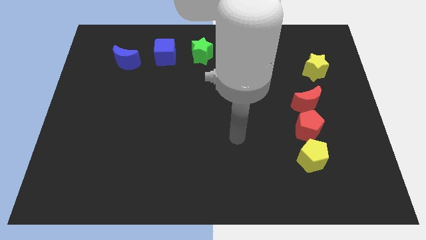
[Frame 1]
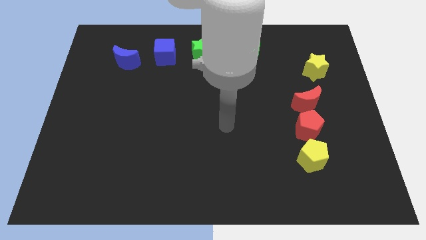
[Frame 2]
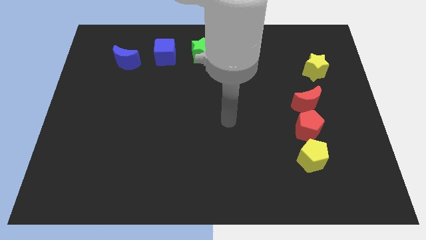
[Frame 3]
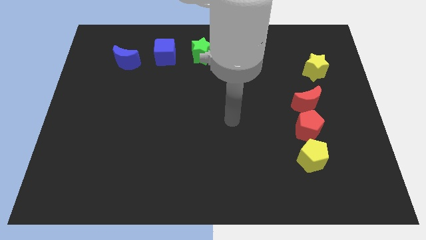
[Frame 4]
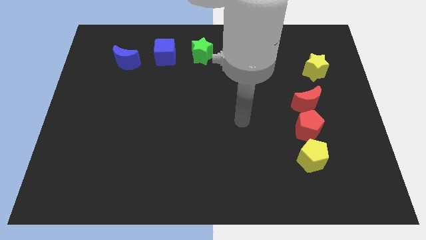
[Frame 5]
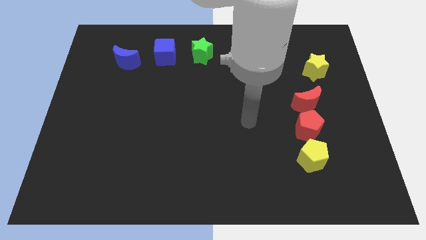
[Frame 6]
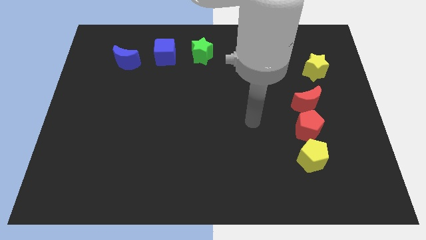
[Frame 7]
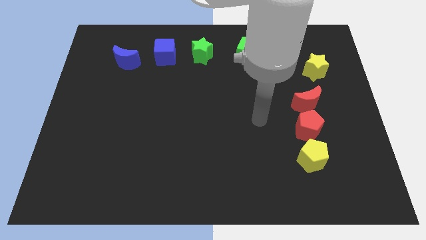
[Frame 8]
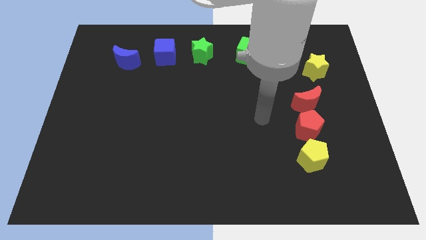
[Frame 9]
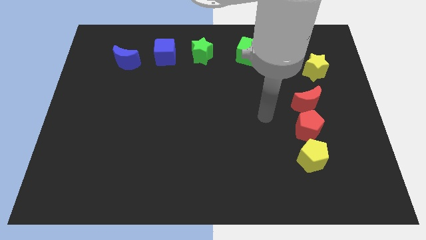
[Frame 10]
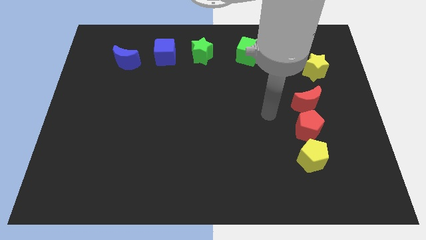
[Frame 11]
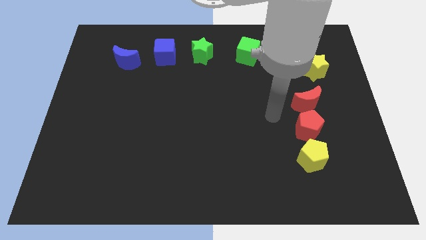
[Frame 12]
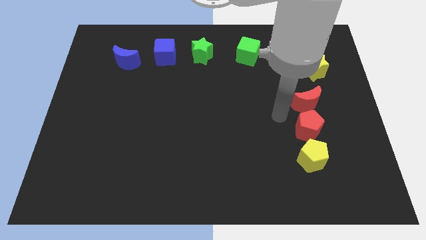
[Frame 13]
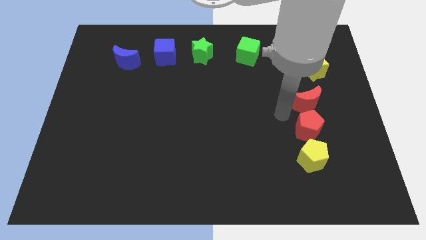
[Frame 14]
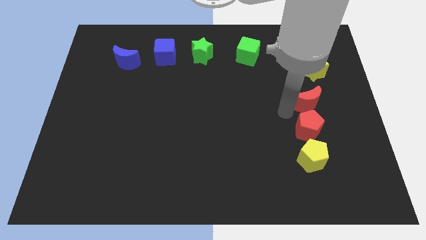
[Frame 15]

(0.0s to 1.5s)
place your hand to the left of the red crescent

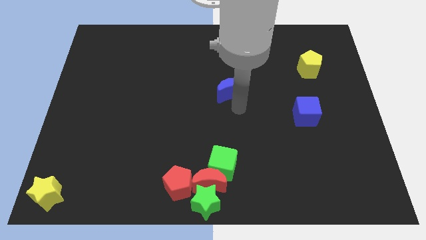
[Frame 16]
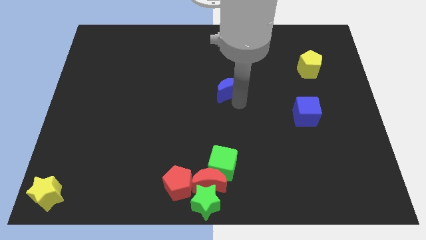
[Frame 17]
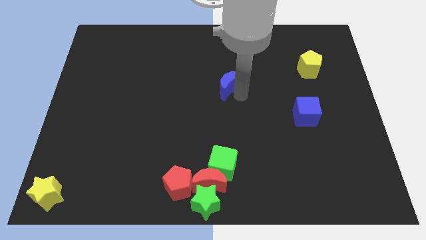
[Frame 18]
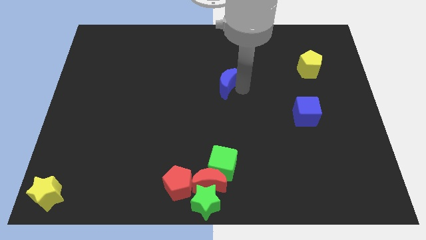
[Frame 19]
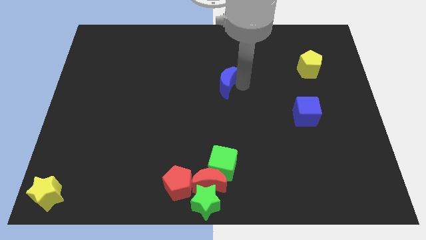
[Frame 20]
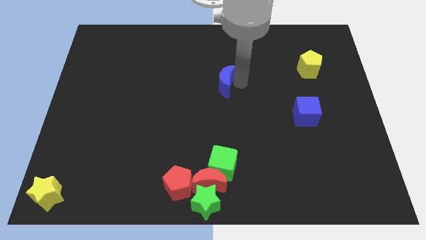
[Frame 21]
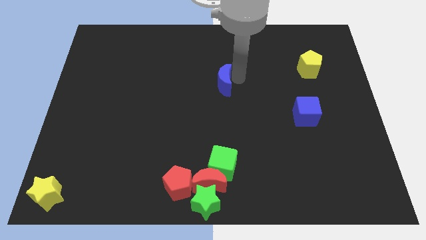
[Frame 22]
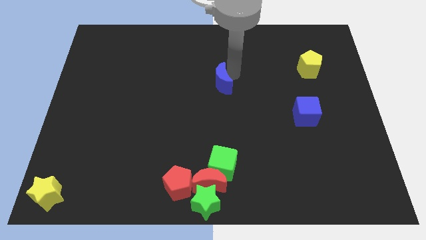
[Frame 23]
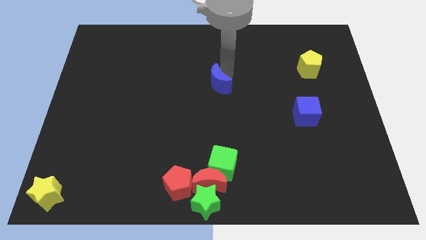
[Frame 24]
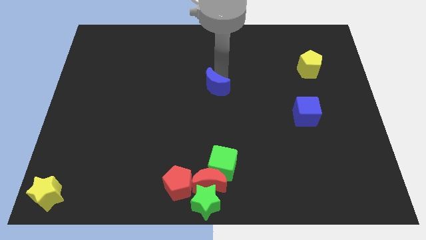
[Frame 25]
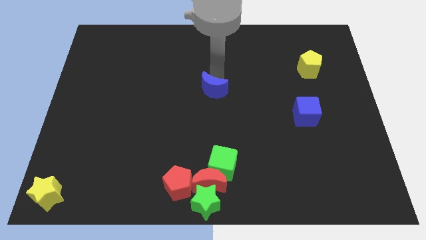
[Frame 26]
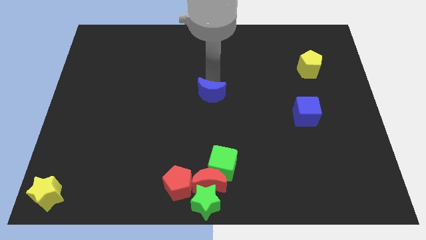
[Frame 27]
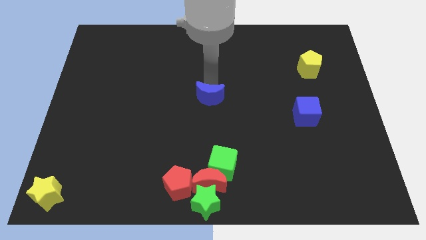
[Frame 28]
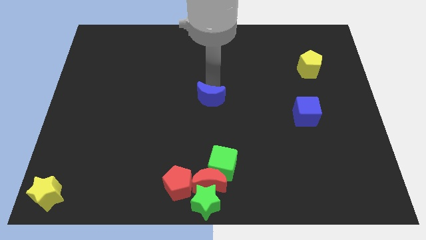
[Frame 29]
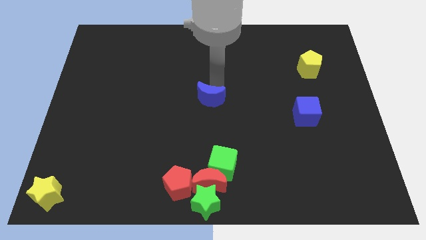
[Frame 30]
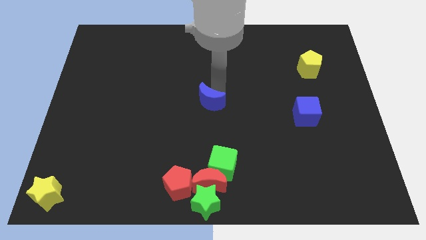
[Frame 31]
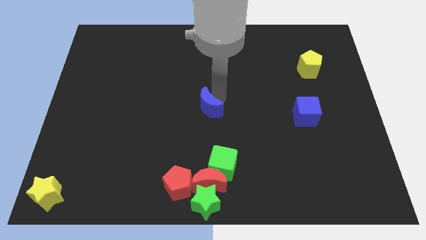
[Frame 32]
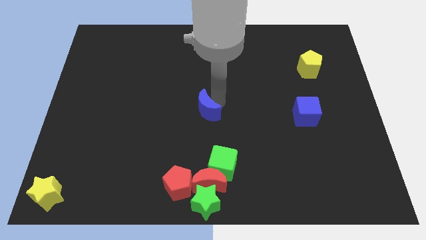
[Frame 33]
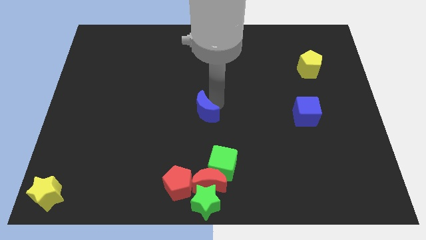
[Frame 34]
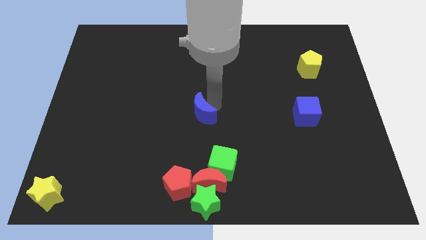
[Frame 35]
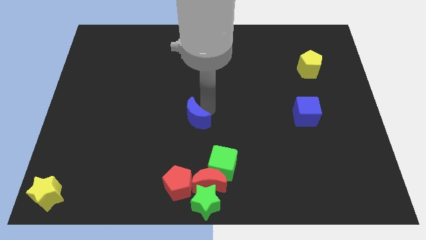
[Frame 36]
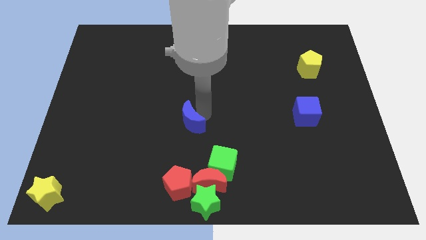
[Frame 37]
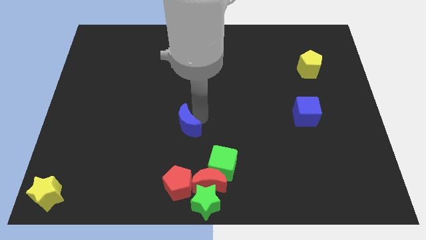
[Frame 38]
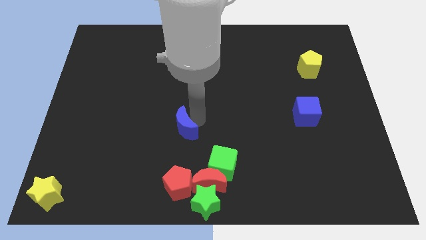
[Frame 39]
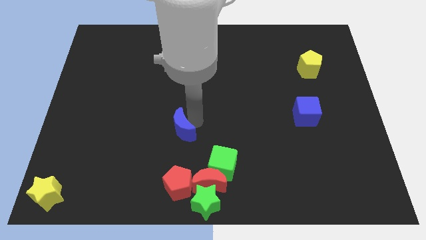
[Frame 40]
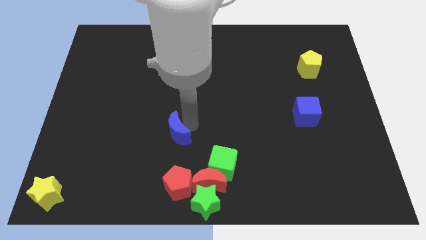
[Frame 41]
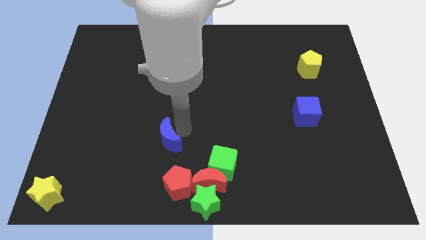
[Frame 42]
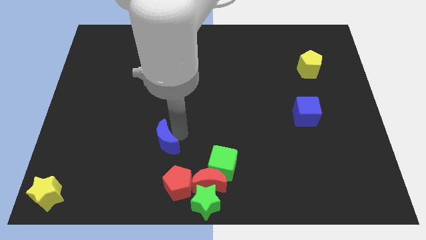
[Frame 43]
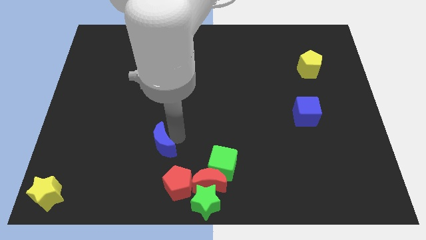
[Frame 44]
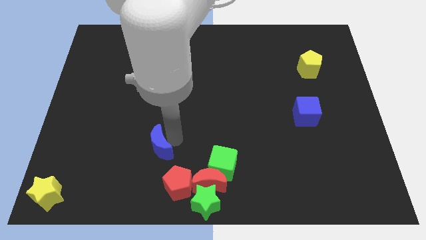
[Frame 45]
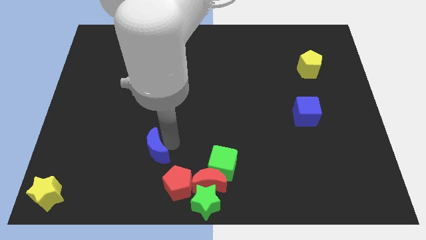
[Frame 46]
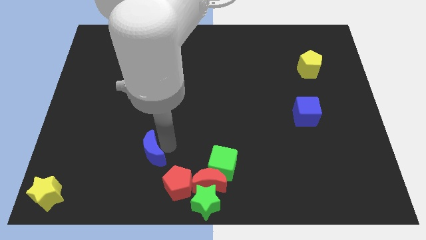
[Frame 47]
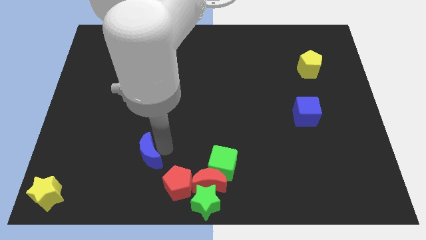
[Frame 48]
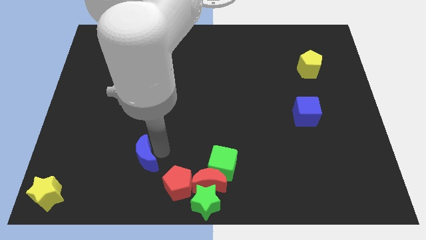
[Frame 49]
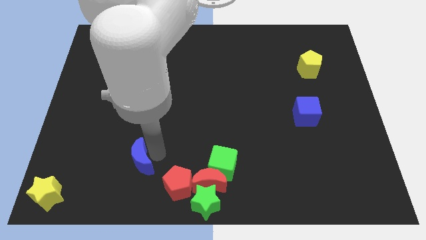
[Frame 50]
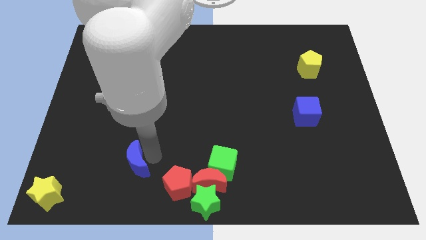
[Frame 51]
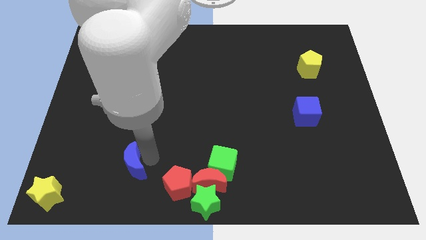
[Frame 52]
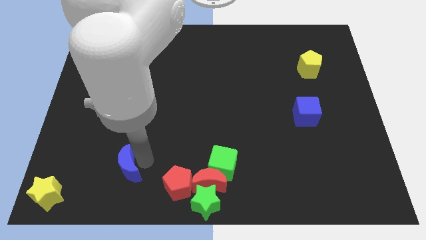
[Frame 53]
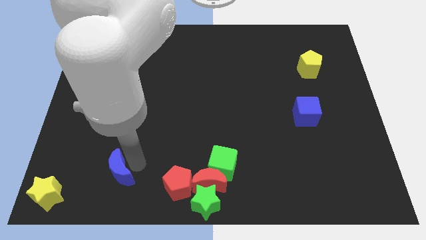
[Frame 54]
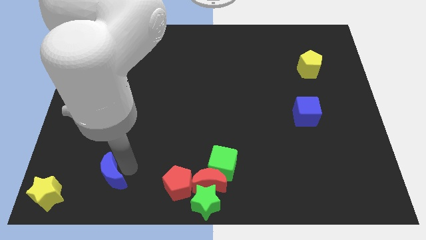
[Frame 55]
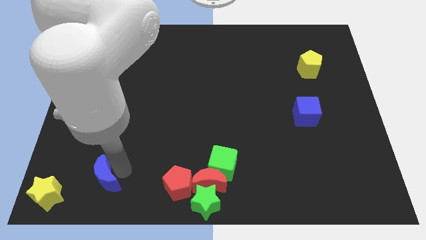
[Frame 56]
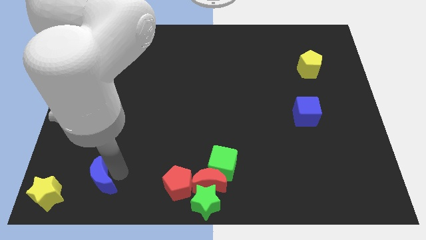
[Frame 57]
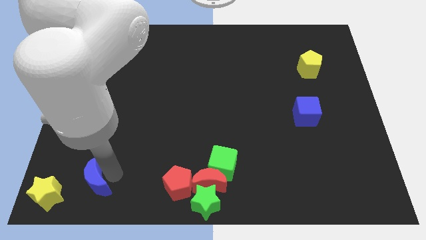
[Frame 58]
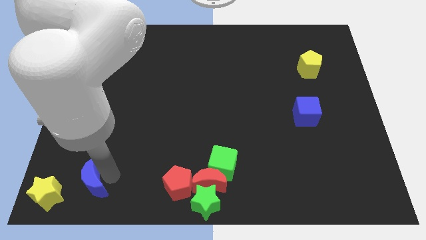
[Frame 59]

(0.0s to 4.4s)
drag the blue crescent parallel to the red pentagon

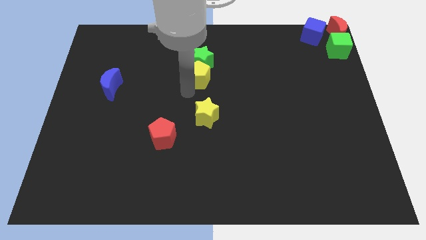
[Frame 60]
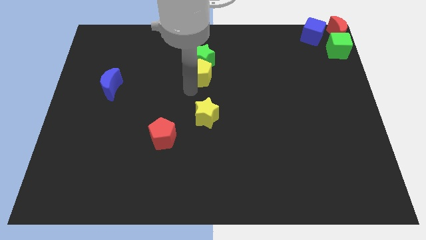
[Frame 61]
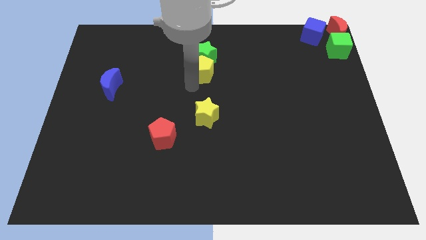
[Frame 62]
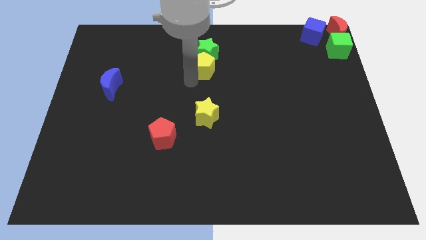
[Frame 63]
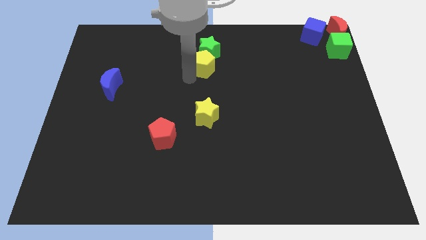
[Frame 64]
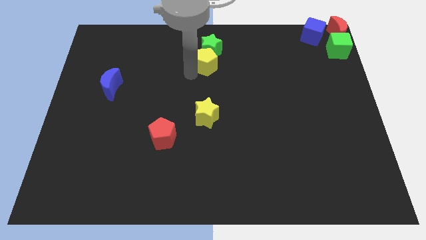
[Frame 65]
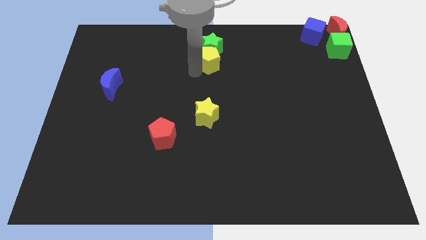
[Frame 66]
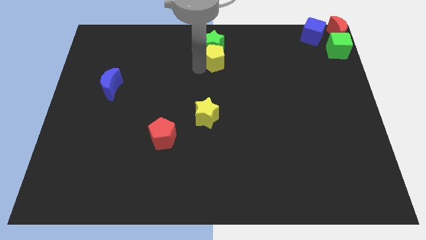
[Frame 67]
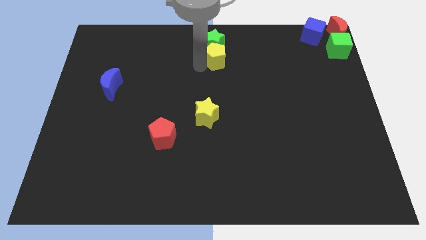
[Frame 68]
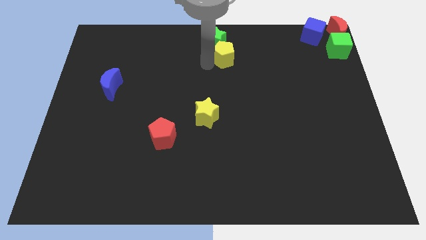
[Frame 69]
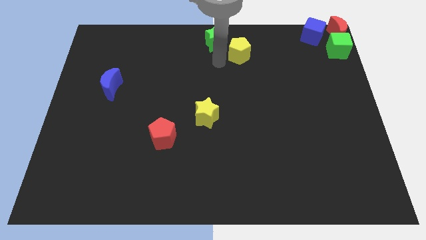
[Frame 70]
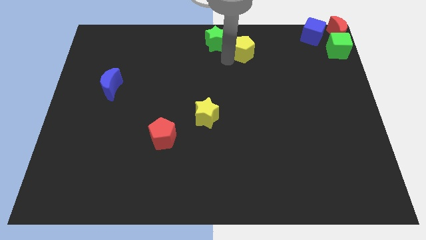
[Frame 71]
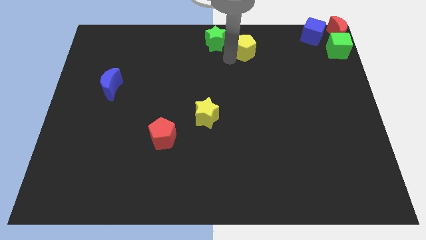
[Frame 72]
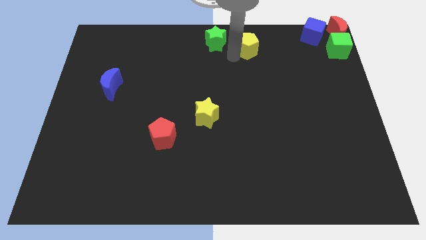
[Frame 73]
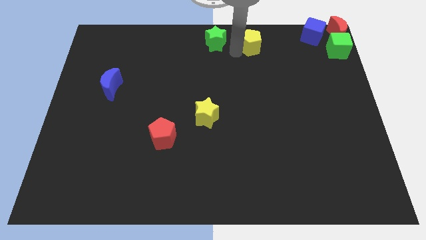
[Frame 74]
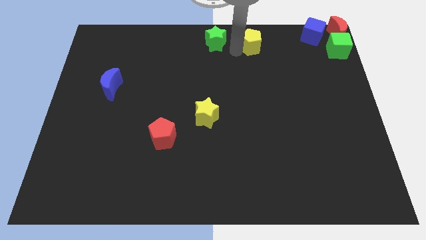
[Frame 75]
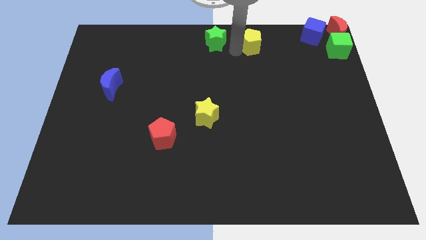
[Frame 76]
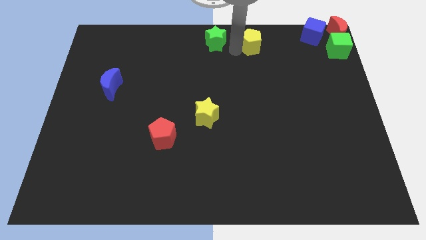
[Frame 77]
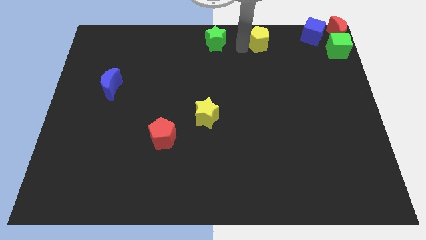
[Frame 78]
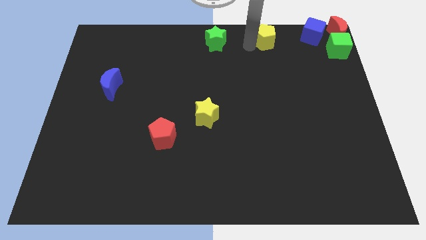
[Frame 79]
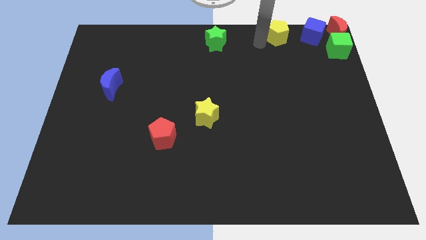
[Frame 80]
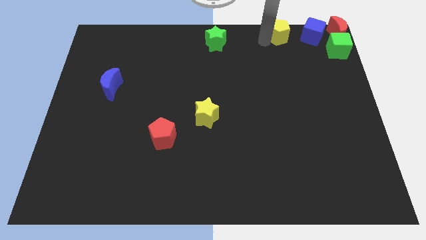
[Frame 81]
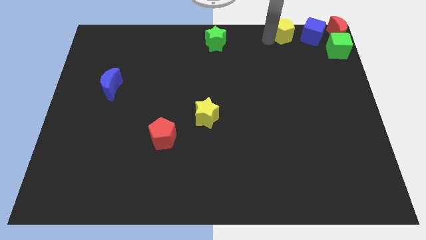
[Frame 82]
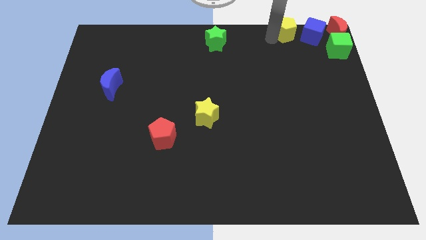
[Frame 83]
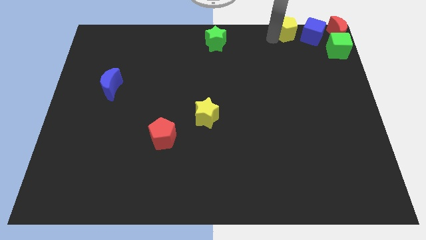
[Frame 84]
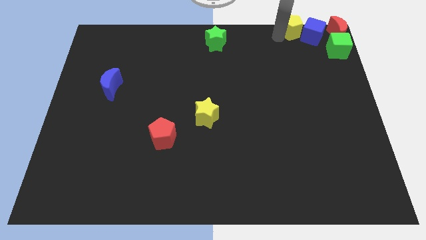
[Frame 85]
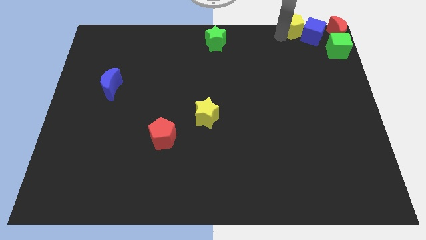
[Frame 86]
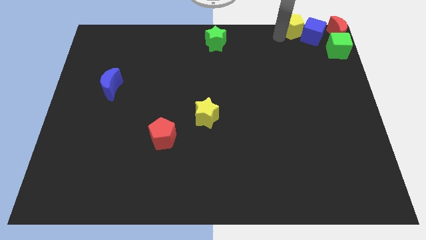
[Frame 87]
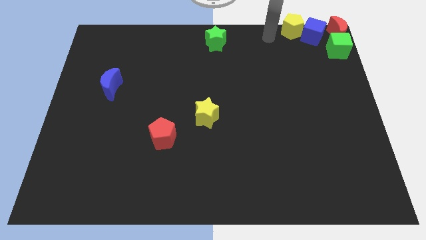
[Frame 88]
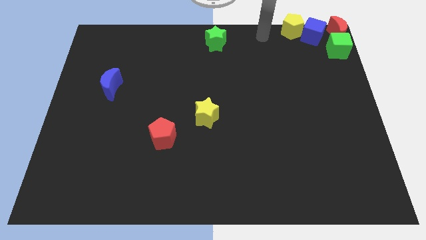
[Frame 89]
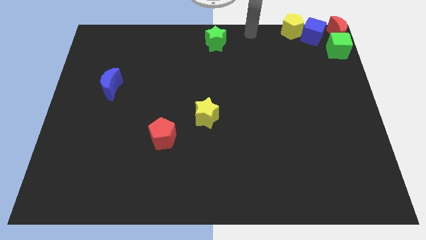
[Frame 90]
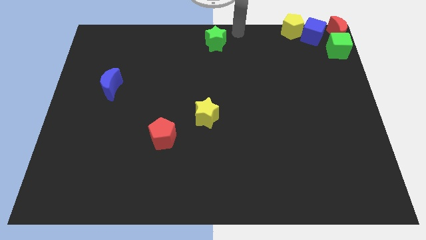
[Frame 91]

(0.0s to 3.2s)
separate yellow pentagon from green star

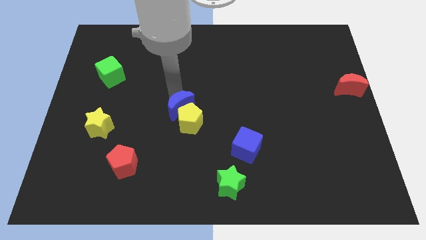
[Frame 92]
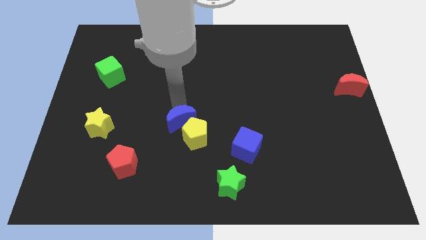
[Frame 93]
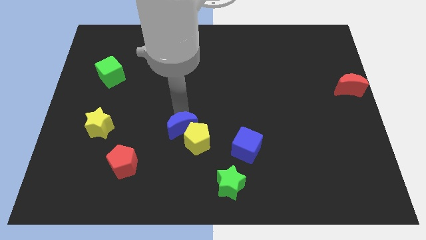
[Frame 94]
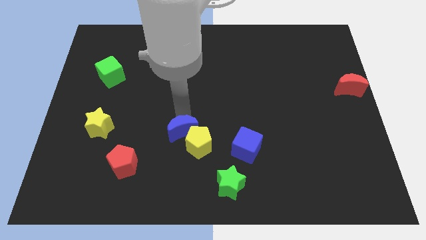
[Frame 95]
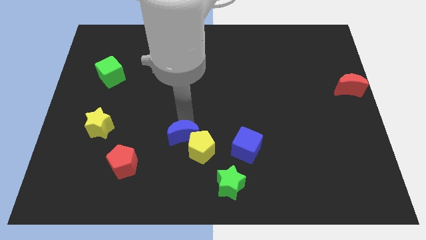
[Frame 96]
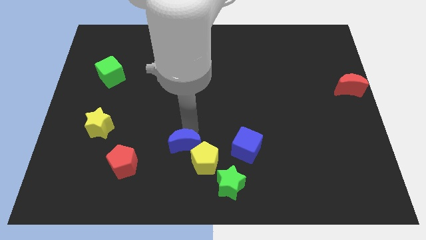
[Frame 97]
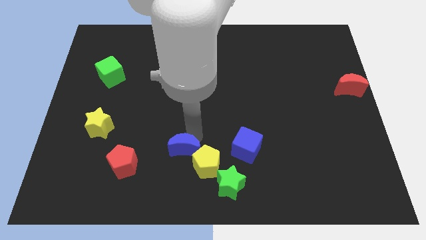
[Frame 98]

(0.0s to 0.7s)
push the yellow pentagon and blue moon towards the bottom center
